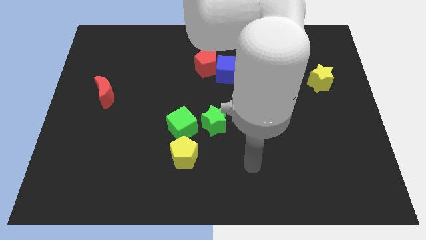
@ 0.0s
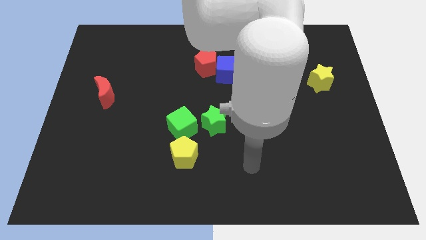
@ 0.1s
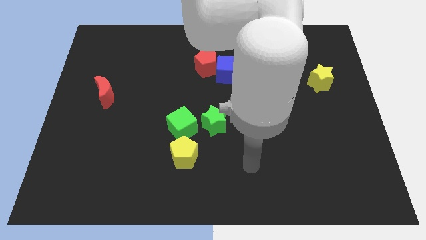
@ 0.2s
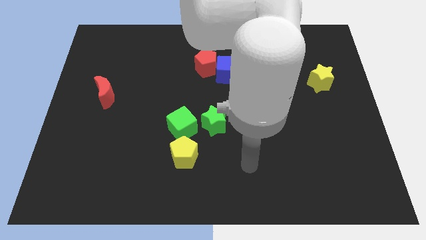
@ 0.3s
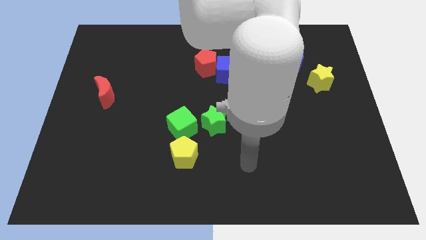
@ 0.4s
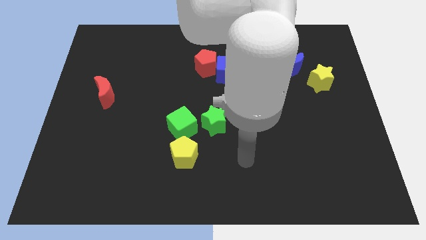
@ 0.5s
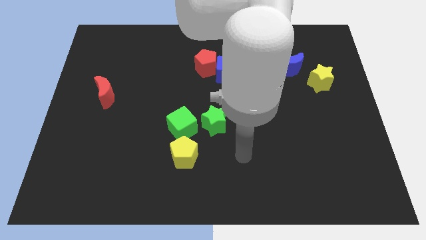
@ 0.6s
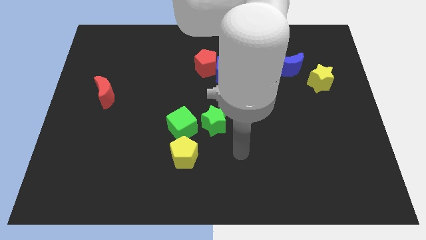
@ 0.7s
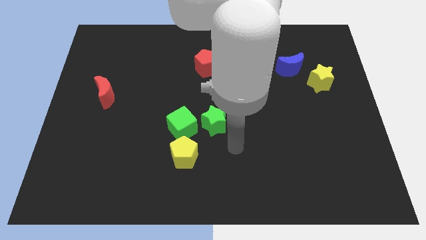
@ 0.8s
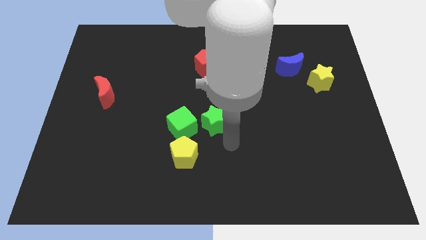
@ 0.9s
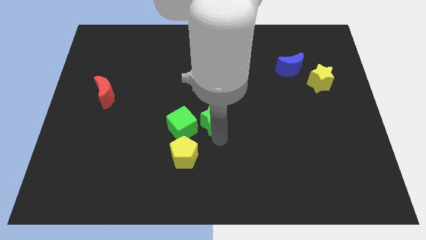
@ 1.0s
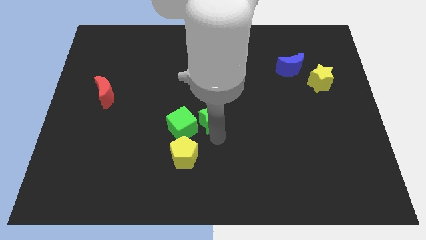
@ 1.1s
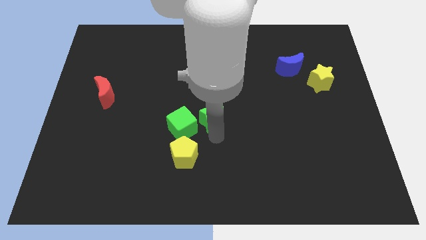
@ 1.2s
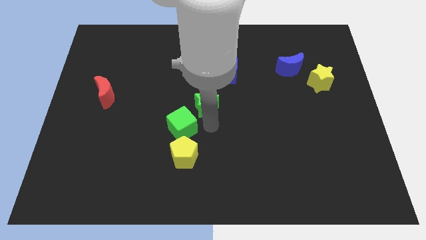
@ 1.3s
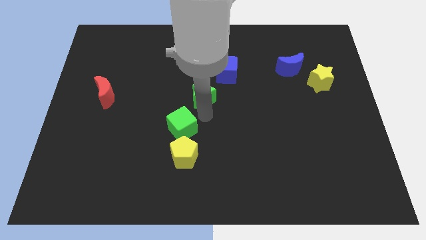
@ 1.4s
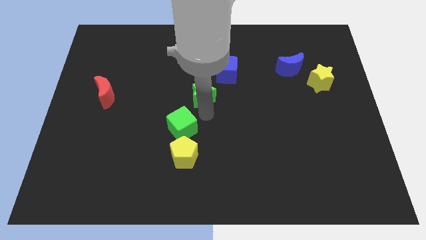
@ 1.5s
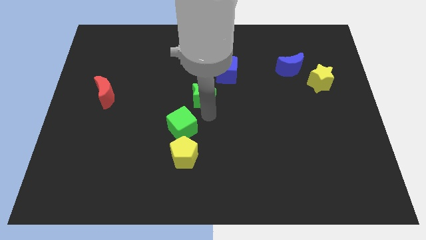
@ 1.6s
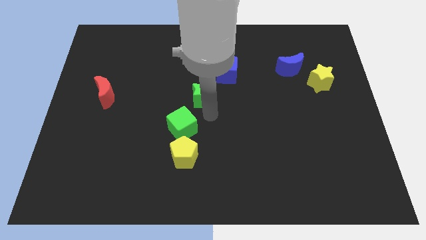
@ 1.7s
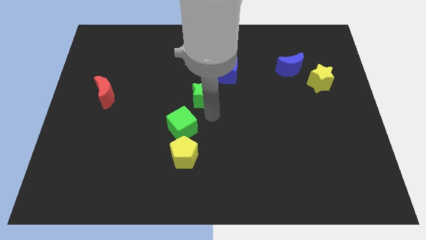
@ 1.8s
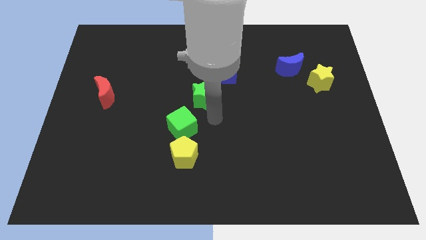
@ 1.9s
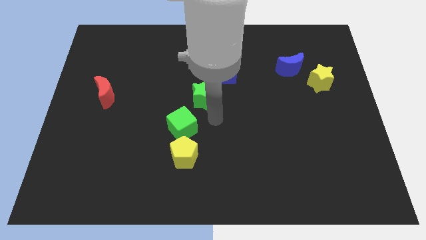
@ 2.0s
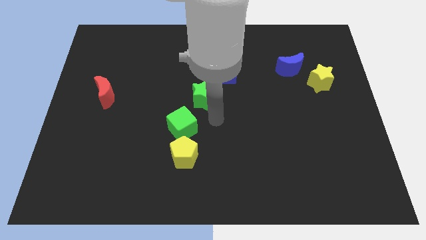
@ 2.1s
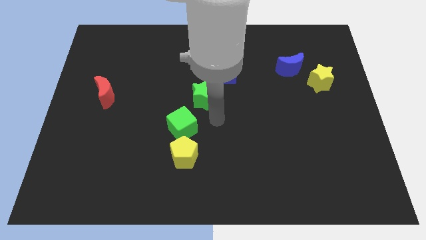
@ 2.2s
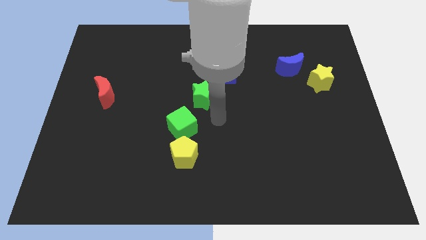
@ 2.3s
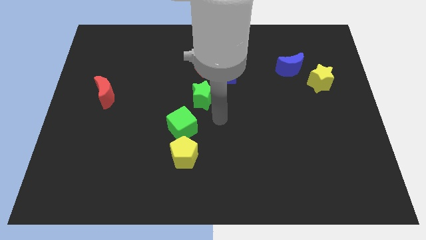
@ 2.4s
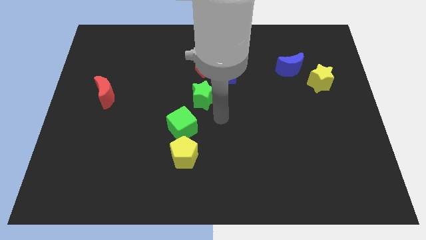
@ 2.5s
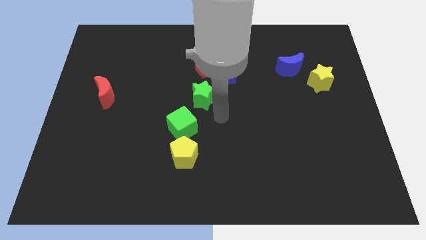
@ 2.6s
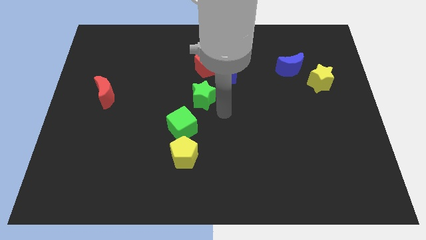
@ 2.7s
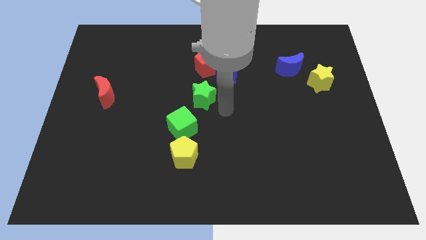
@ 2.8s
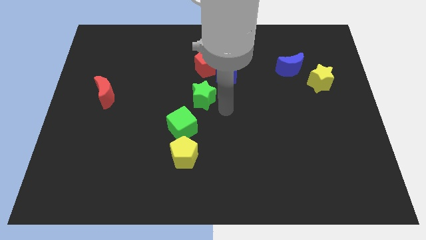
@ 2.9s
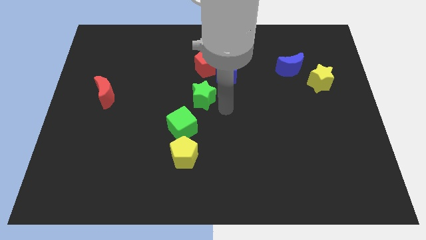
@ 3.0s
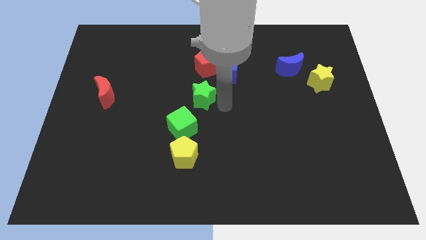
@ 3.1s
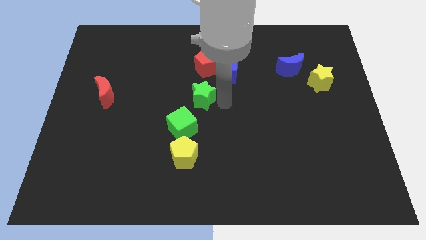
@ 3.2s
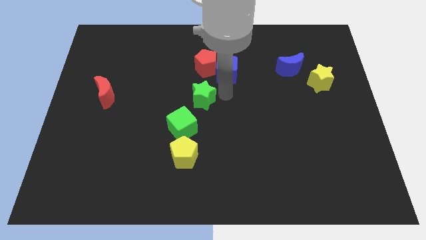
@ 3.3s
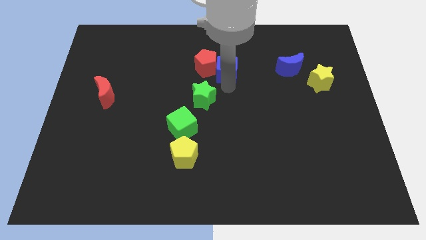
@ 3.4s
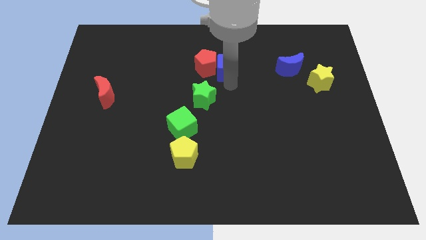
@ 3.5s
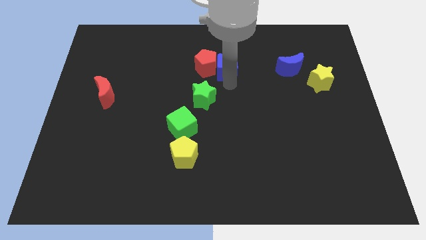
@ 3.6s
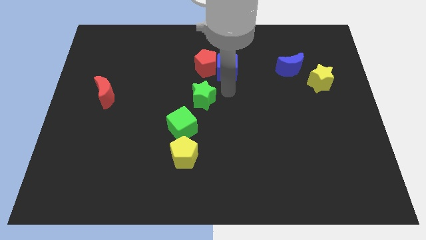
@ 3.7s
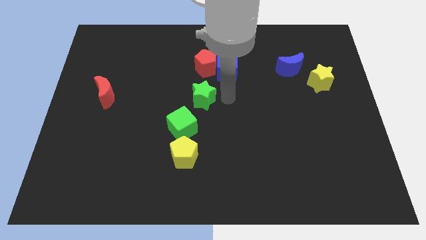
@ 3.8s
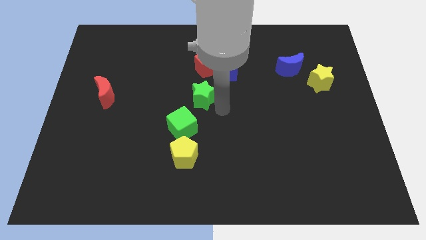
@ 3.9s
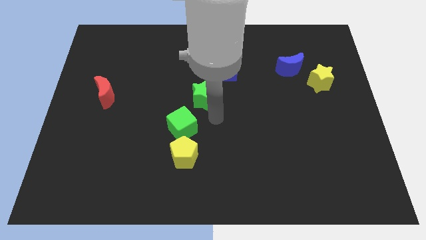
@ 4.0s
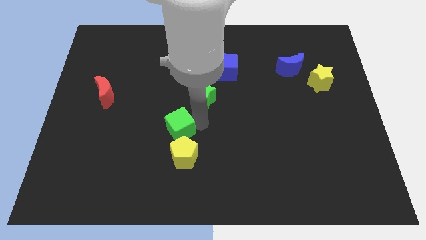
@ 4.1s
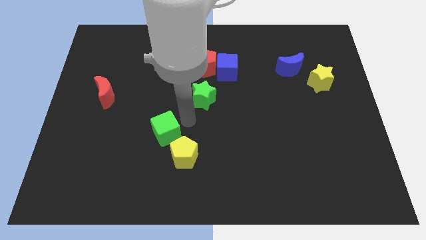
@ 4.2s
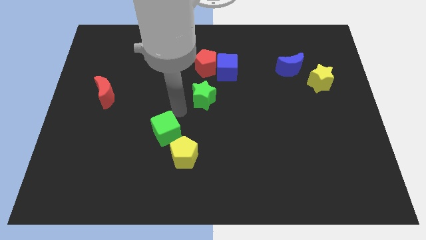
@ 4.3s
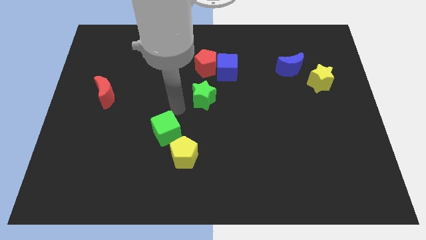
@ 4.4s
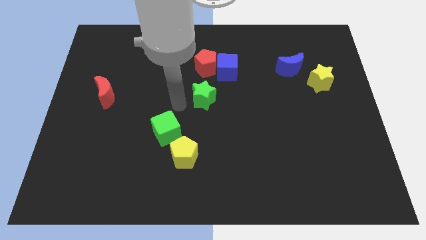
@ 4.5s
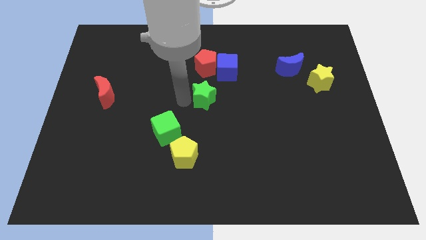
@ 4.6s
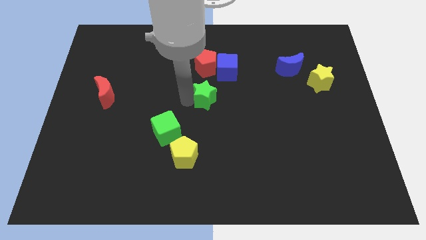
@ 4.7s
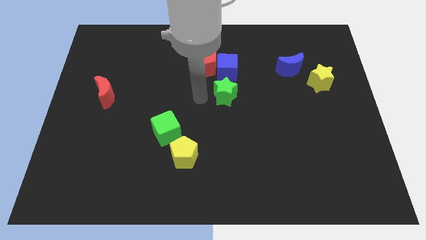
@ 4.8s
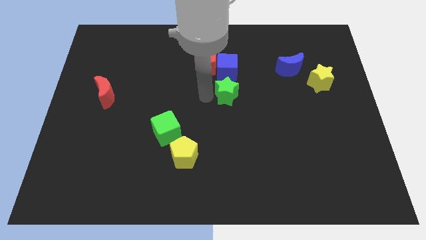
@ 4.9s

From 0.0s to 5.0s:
move the green star to the bottom side of the blue cube

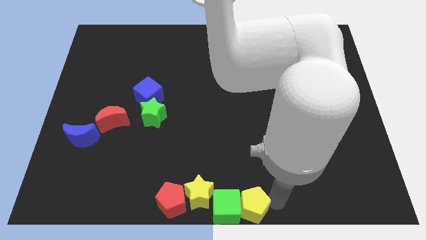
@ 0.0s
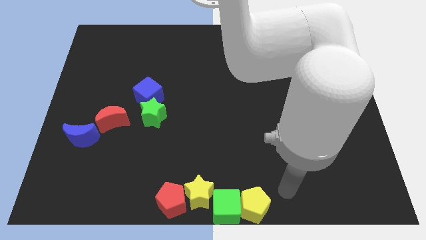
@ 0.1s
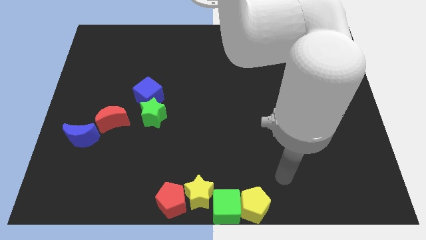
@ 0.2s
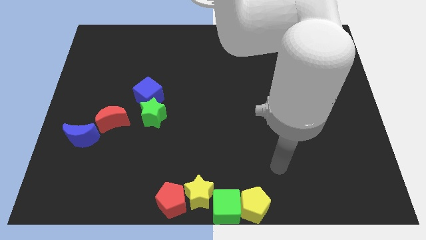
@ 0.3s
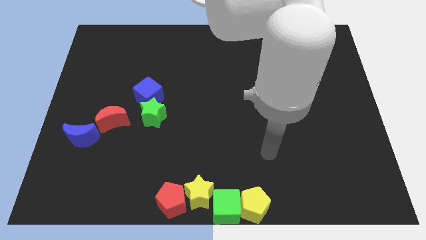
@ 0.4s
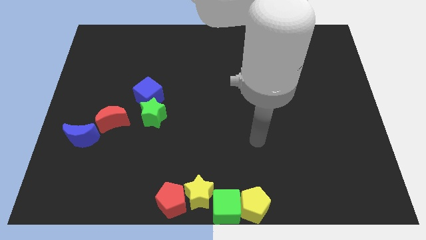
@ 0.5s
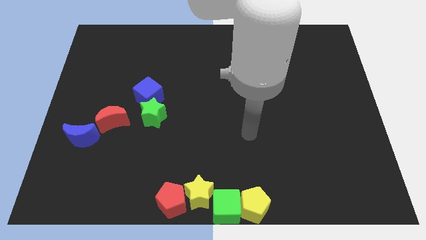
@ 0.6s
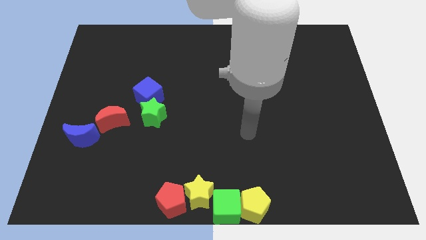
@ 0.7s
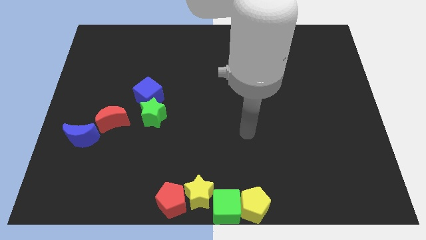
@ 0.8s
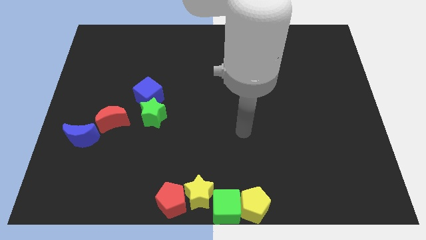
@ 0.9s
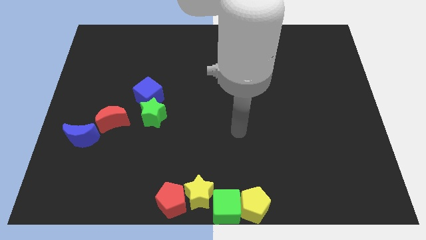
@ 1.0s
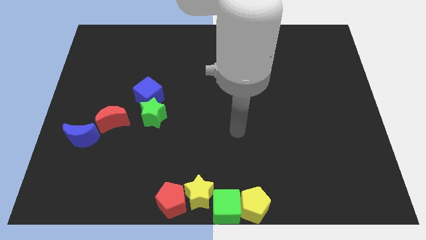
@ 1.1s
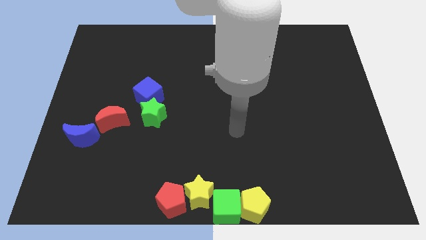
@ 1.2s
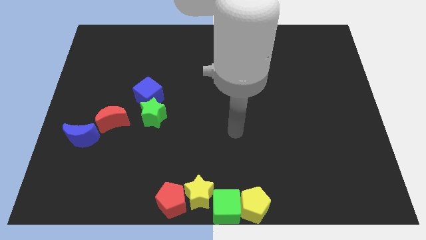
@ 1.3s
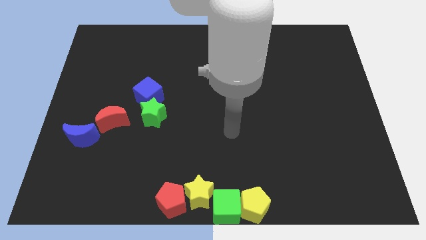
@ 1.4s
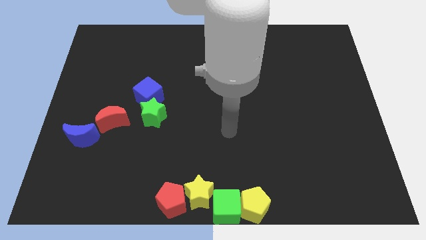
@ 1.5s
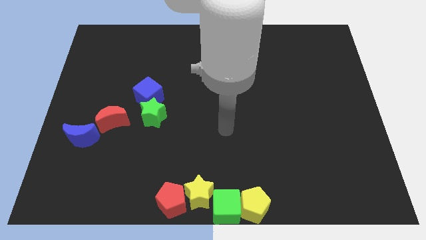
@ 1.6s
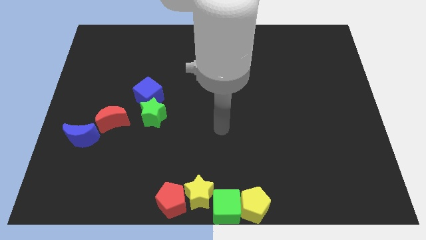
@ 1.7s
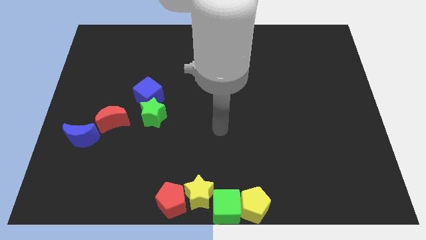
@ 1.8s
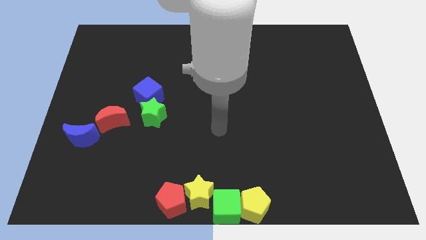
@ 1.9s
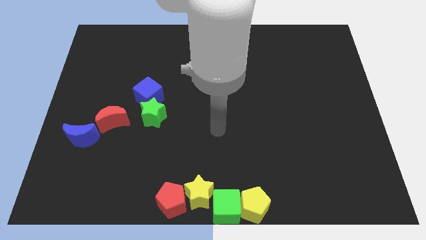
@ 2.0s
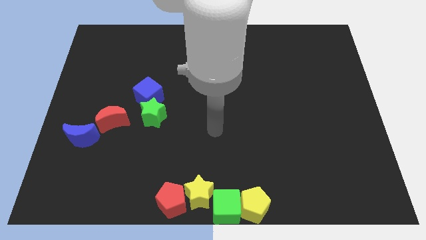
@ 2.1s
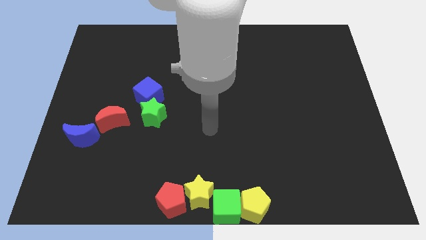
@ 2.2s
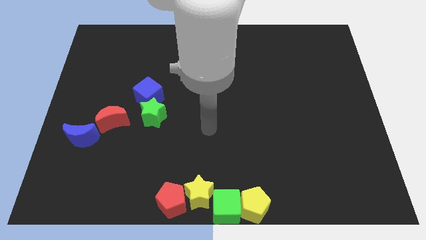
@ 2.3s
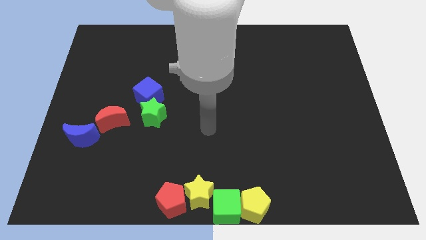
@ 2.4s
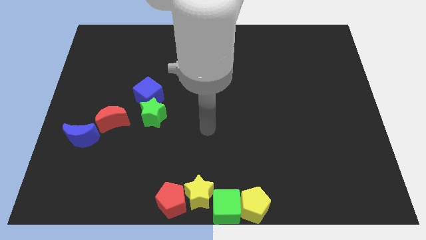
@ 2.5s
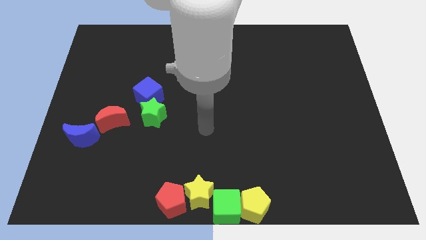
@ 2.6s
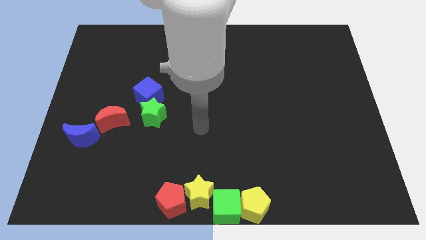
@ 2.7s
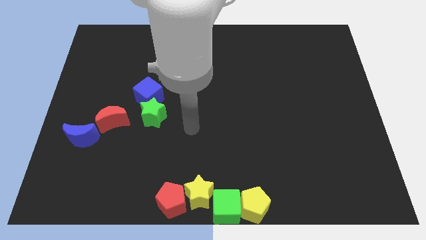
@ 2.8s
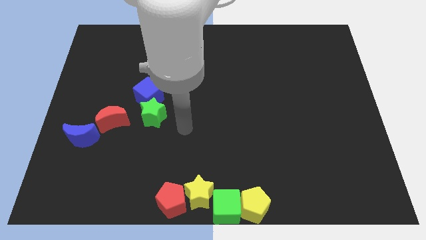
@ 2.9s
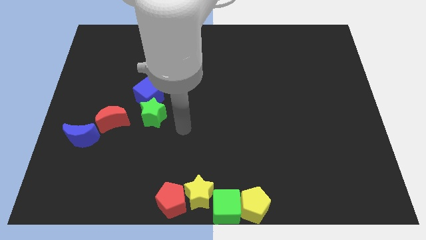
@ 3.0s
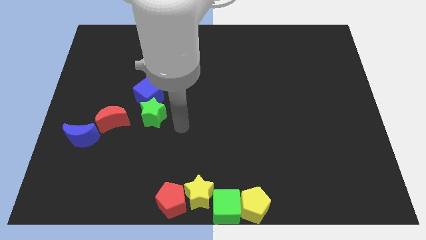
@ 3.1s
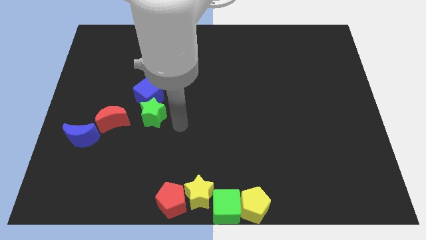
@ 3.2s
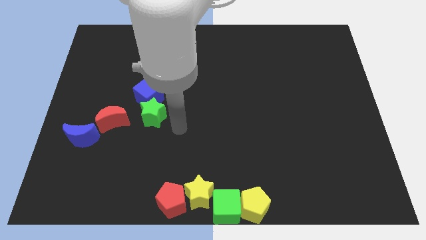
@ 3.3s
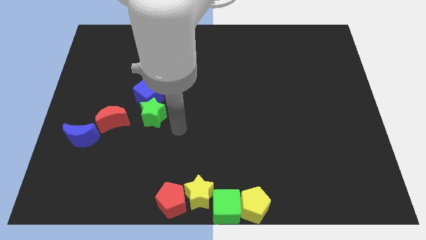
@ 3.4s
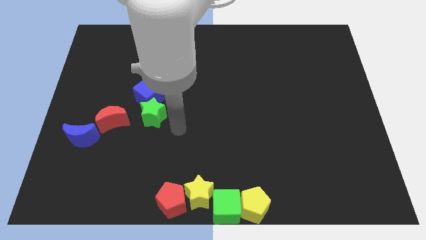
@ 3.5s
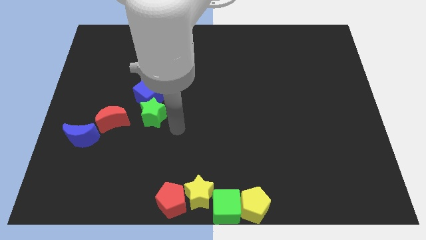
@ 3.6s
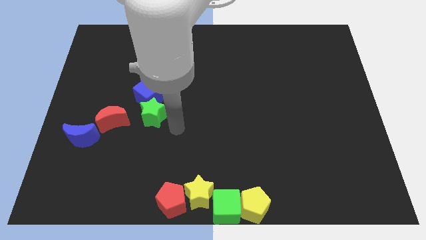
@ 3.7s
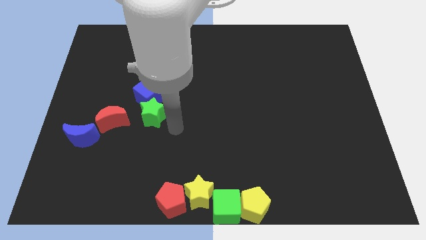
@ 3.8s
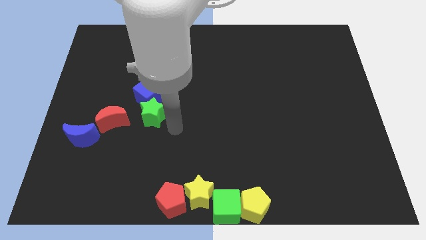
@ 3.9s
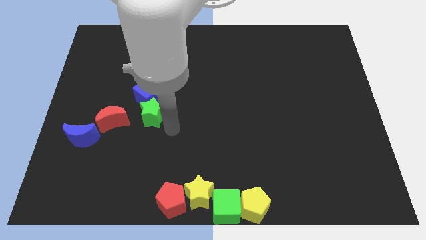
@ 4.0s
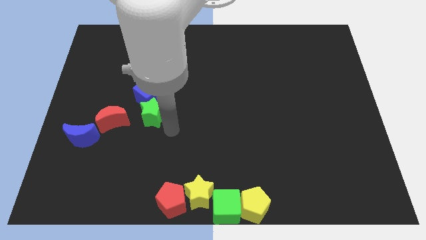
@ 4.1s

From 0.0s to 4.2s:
move the arm towards the green star
